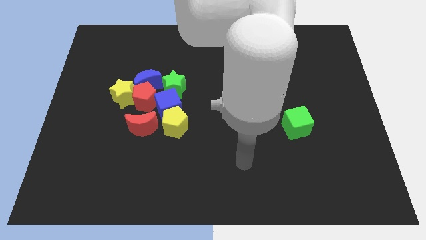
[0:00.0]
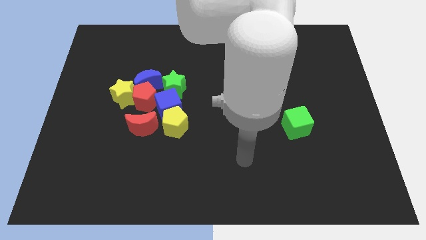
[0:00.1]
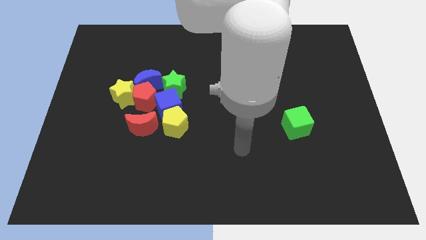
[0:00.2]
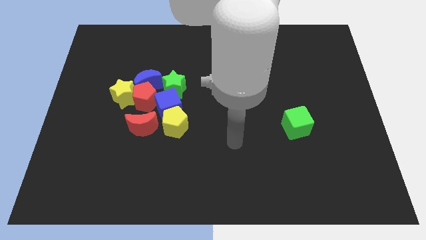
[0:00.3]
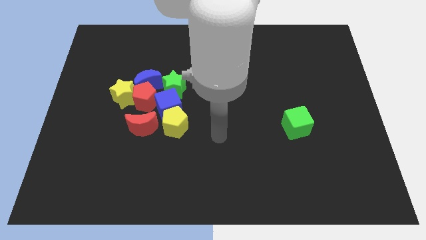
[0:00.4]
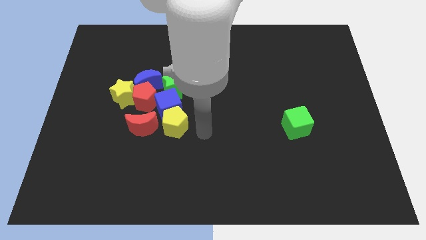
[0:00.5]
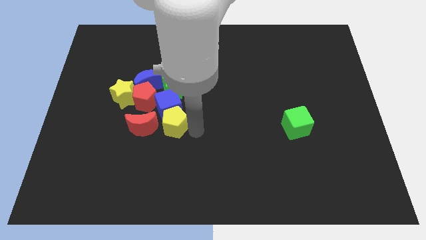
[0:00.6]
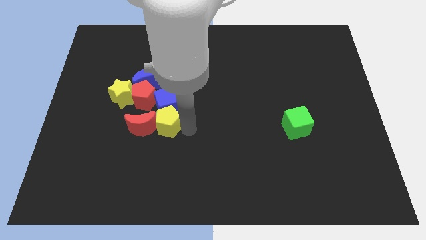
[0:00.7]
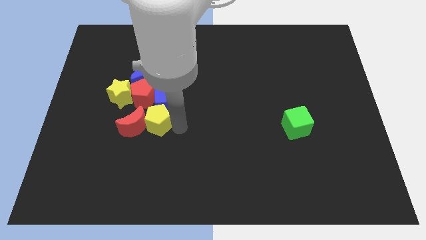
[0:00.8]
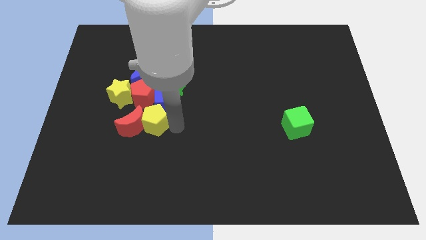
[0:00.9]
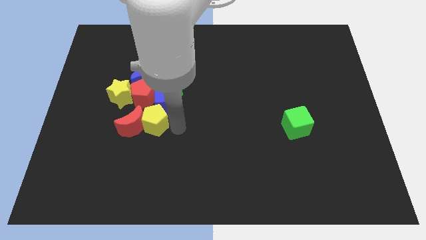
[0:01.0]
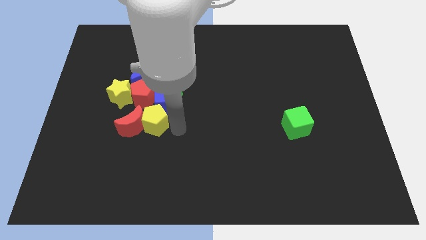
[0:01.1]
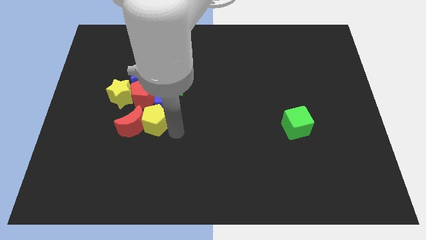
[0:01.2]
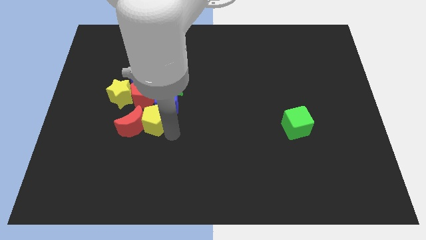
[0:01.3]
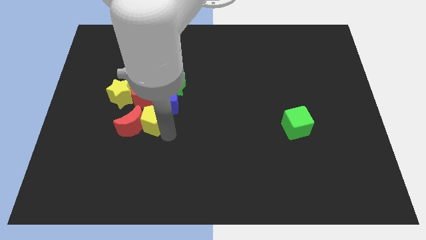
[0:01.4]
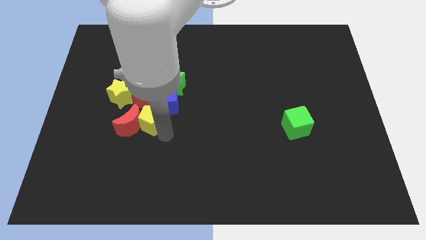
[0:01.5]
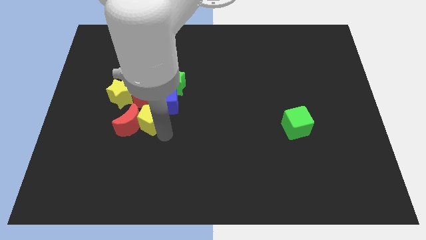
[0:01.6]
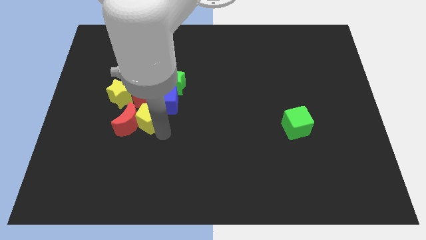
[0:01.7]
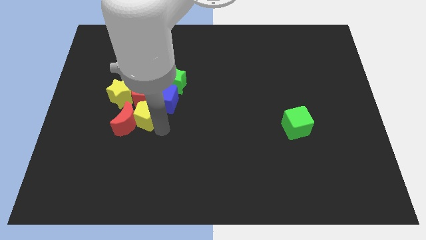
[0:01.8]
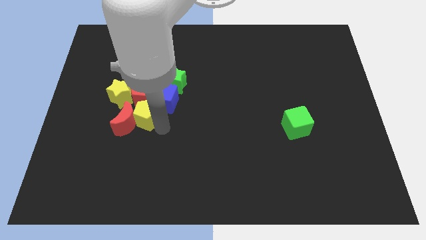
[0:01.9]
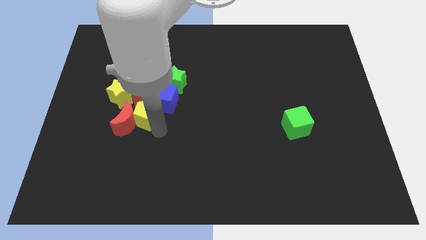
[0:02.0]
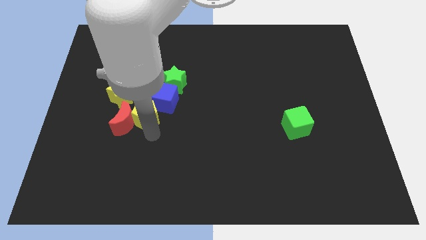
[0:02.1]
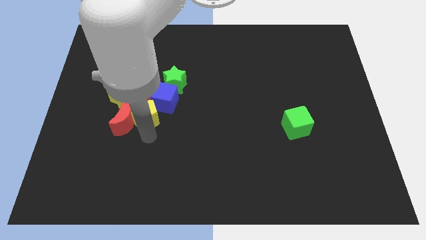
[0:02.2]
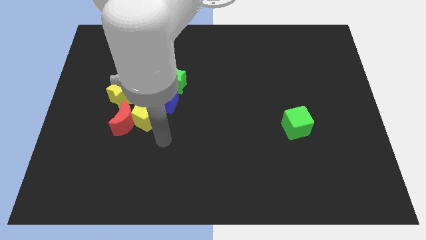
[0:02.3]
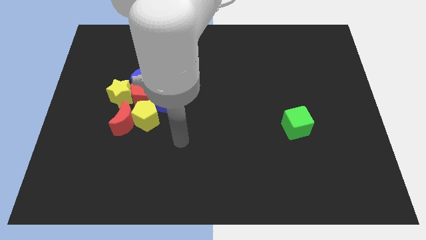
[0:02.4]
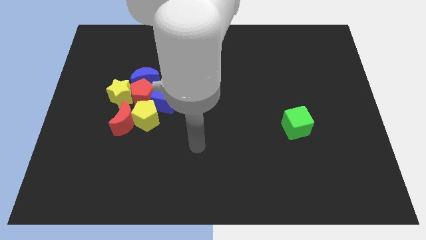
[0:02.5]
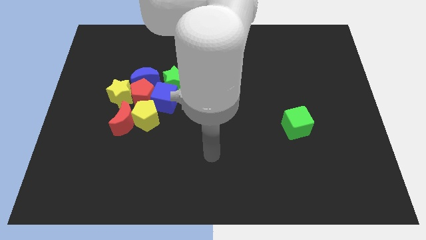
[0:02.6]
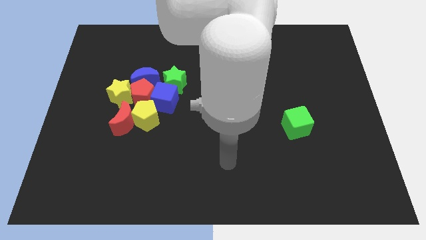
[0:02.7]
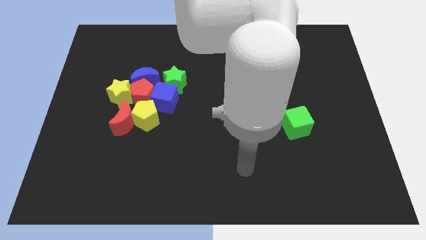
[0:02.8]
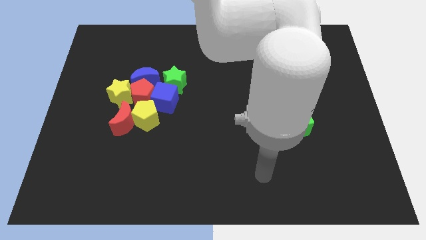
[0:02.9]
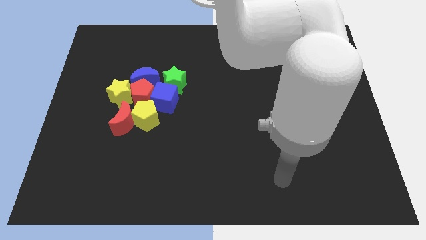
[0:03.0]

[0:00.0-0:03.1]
place yellow pentagon below red pentagon

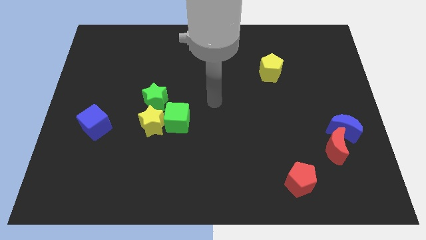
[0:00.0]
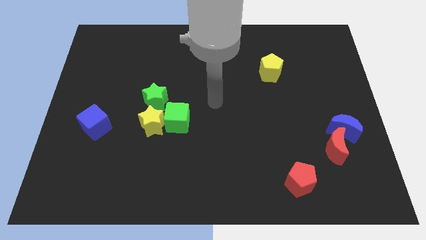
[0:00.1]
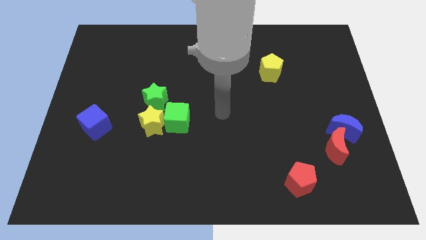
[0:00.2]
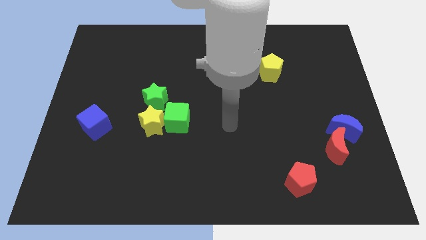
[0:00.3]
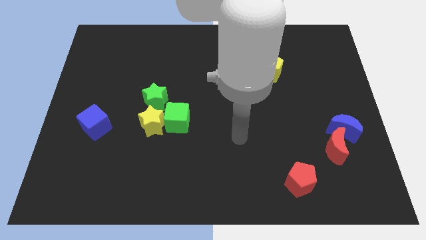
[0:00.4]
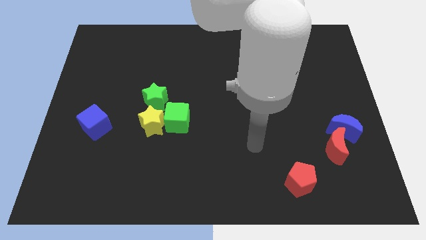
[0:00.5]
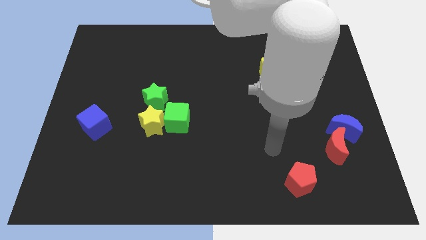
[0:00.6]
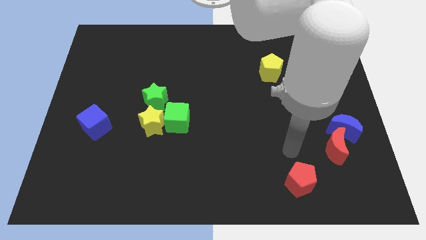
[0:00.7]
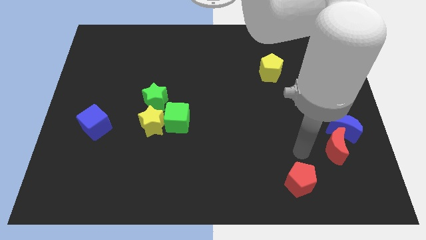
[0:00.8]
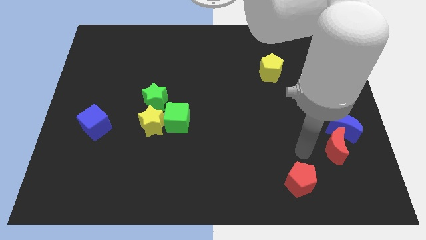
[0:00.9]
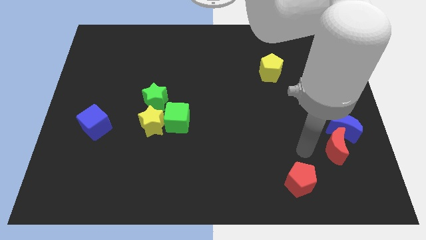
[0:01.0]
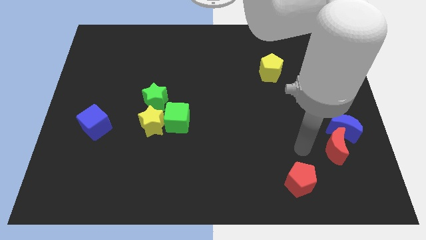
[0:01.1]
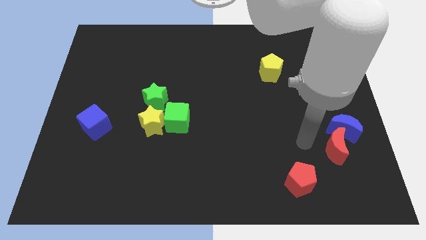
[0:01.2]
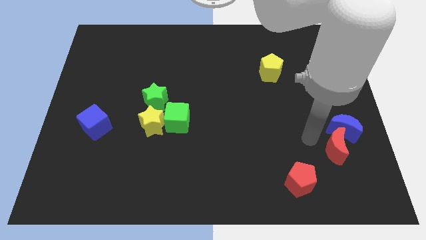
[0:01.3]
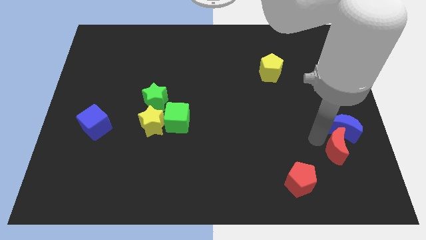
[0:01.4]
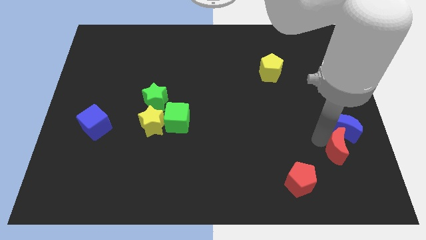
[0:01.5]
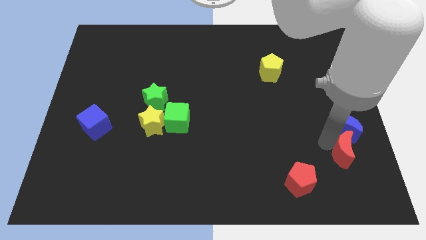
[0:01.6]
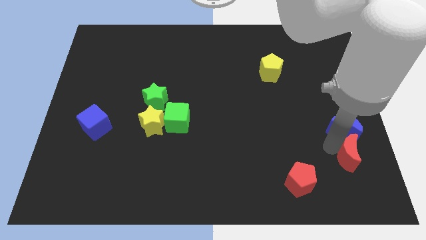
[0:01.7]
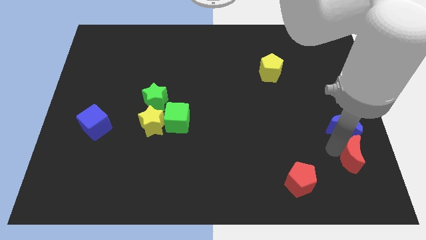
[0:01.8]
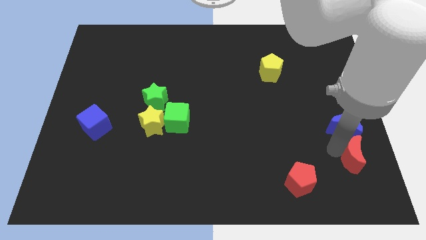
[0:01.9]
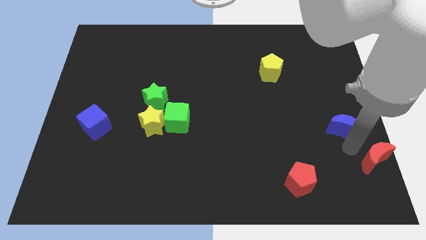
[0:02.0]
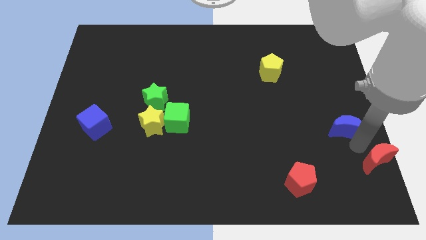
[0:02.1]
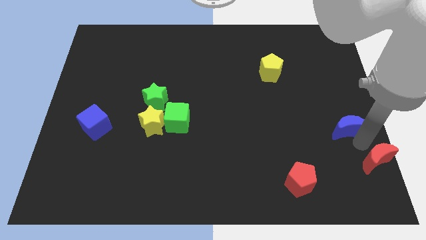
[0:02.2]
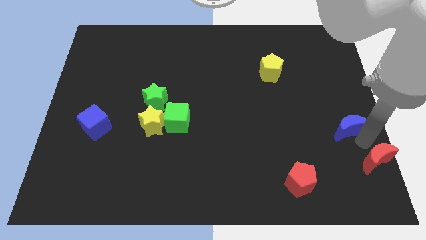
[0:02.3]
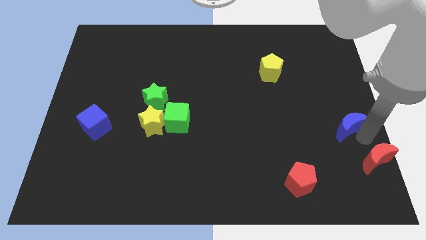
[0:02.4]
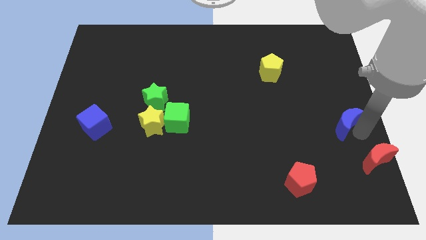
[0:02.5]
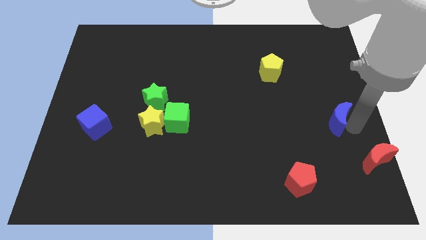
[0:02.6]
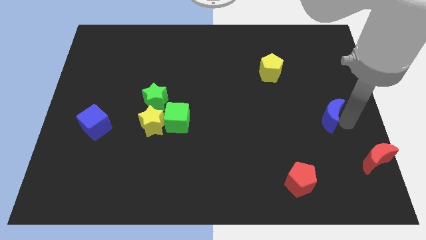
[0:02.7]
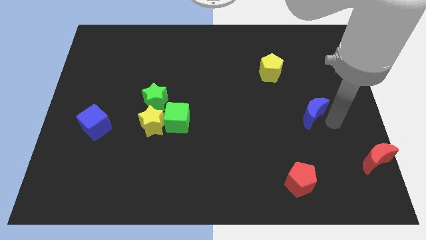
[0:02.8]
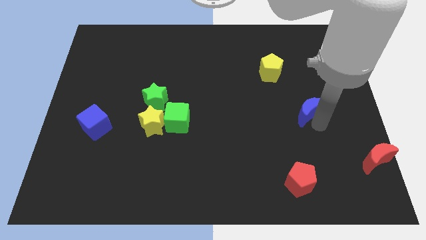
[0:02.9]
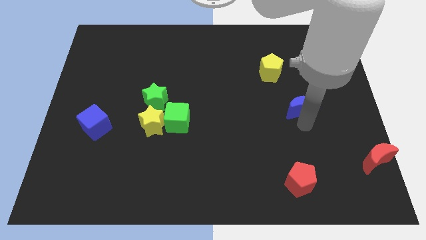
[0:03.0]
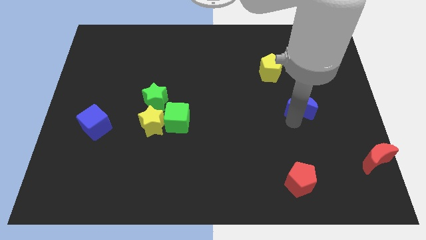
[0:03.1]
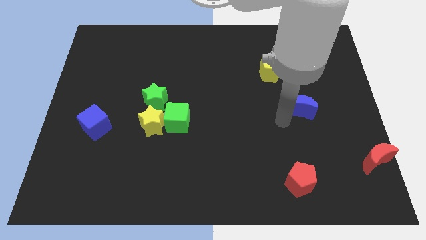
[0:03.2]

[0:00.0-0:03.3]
separate the red moon and blue moon from each other

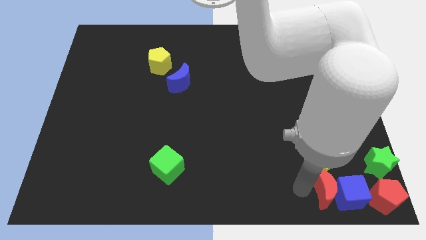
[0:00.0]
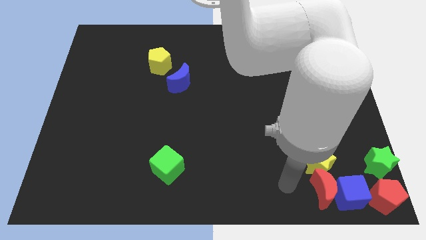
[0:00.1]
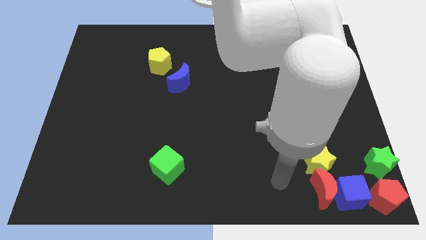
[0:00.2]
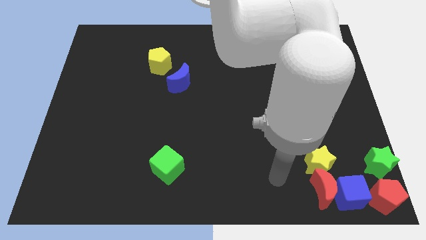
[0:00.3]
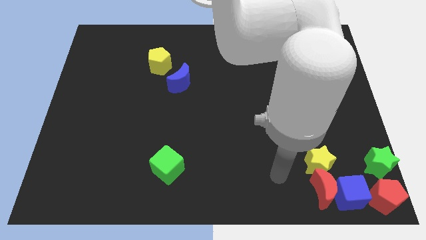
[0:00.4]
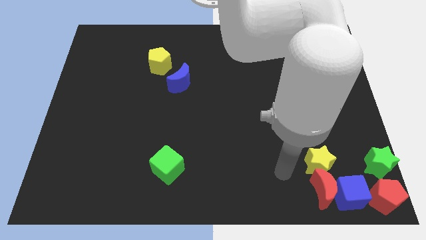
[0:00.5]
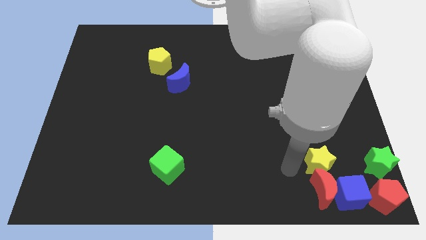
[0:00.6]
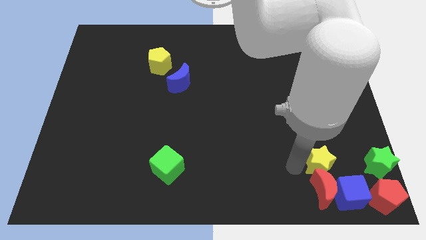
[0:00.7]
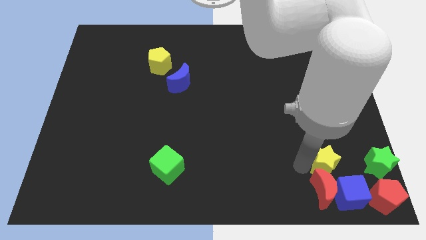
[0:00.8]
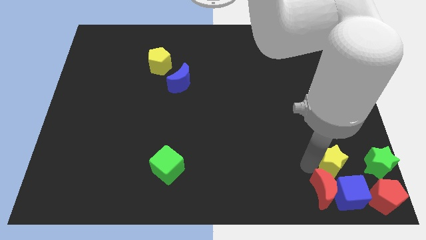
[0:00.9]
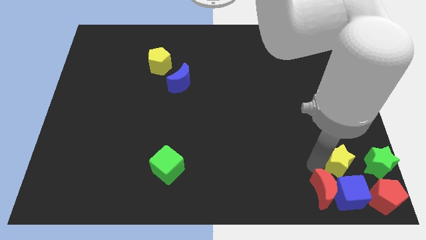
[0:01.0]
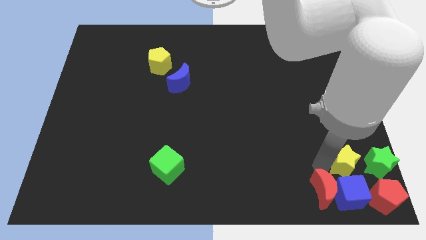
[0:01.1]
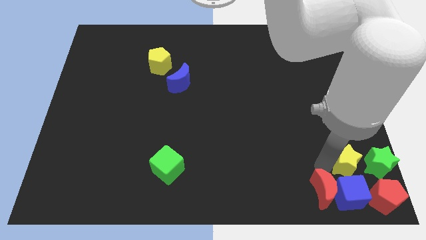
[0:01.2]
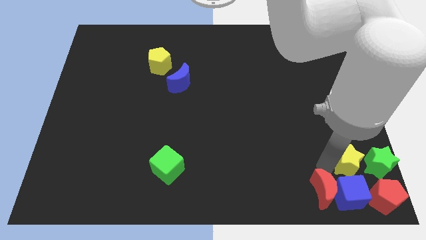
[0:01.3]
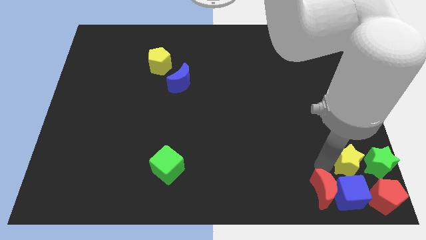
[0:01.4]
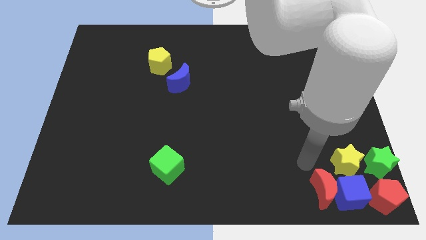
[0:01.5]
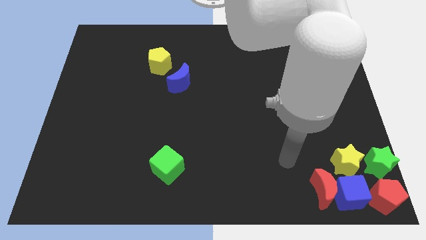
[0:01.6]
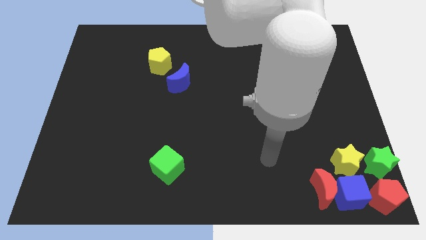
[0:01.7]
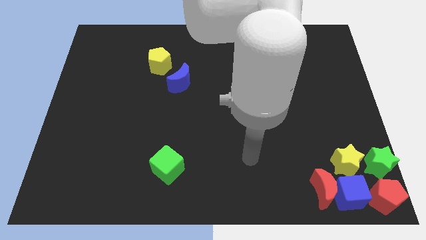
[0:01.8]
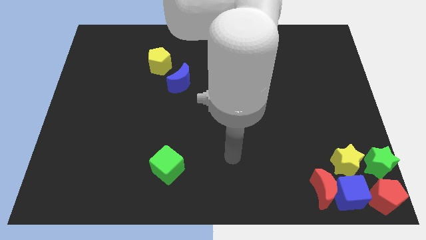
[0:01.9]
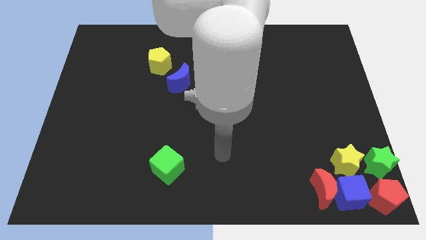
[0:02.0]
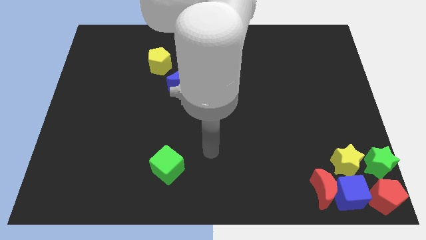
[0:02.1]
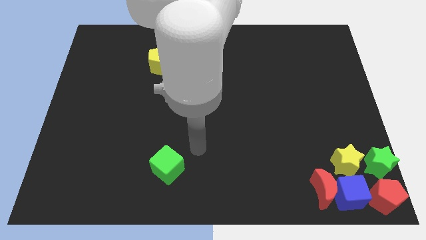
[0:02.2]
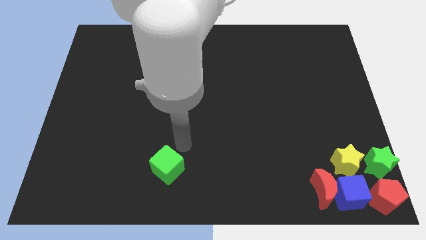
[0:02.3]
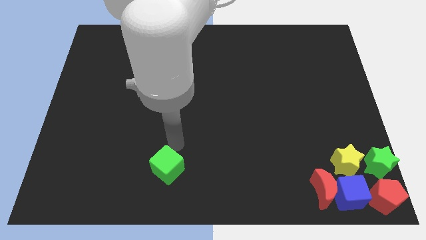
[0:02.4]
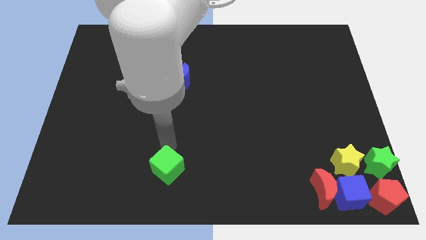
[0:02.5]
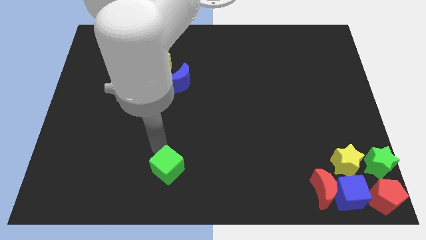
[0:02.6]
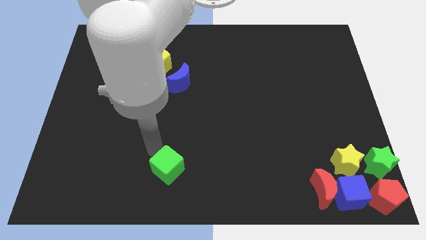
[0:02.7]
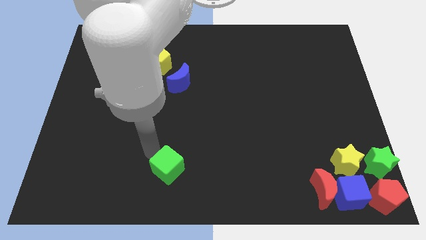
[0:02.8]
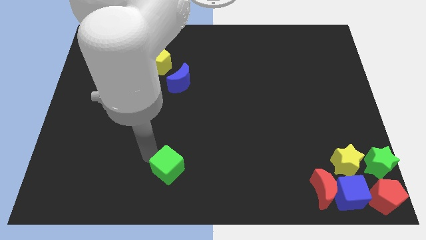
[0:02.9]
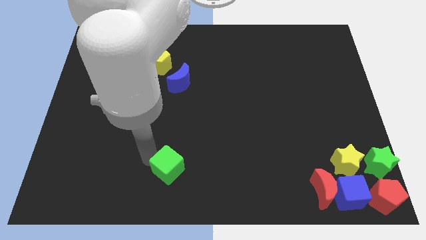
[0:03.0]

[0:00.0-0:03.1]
push the yellow star slightly to the right of the board
